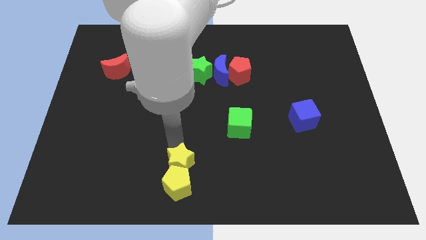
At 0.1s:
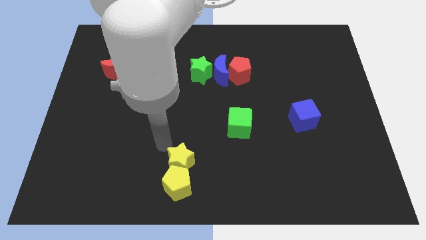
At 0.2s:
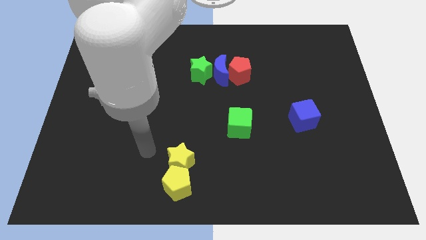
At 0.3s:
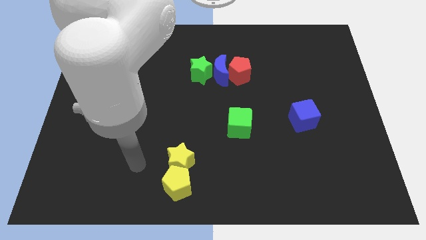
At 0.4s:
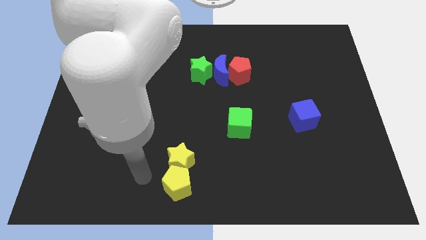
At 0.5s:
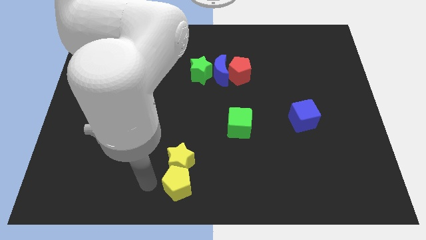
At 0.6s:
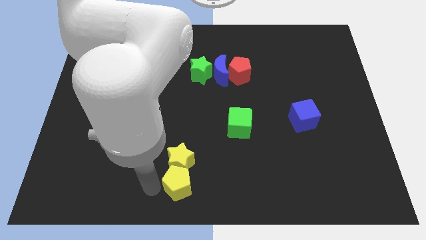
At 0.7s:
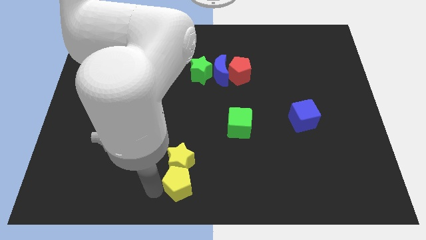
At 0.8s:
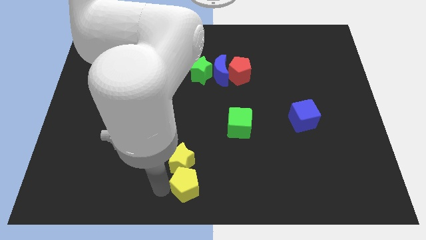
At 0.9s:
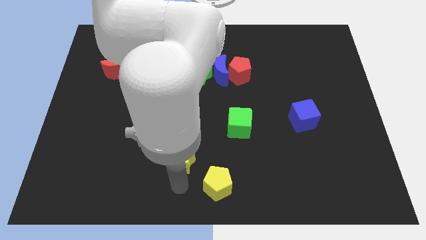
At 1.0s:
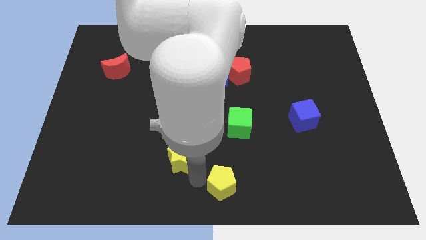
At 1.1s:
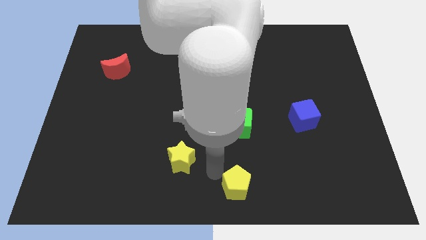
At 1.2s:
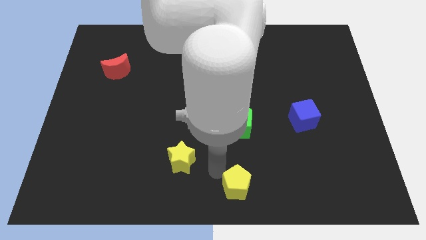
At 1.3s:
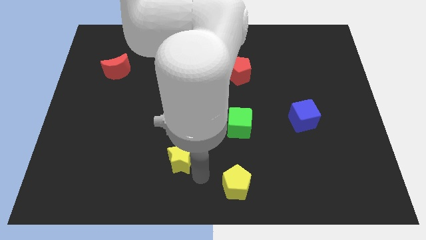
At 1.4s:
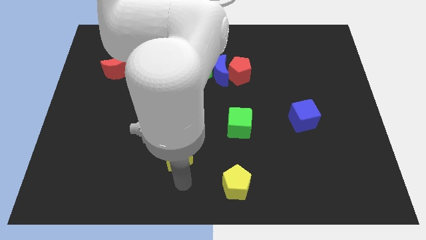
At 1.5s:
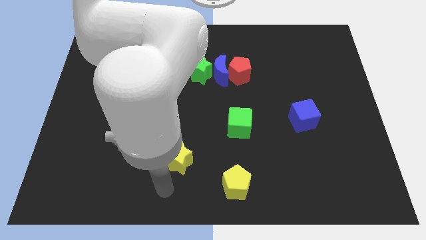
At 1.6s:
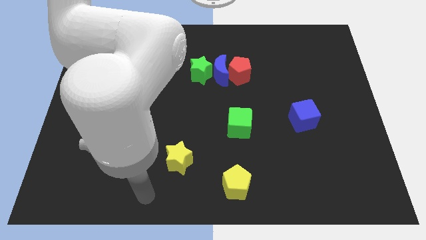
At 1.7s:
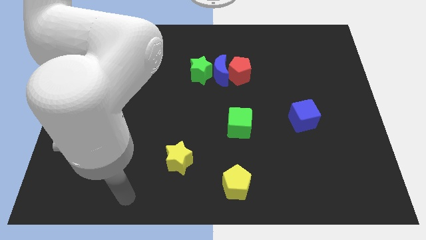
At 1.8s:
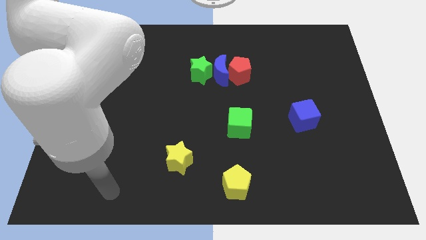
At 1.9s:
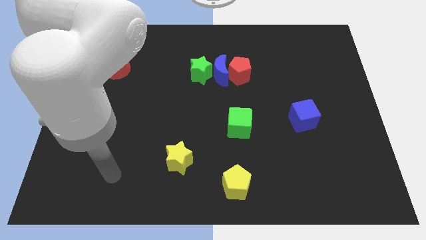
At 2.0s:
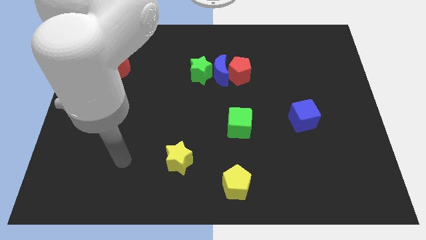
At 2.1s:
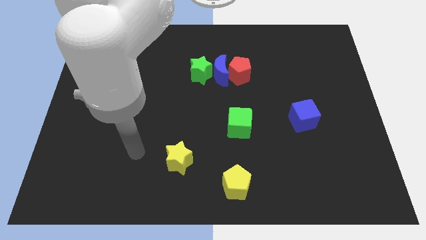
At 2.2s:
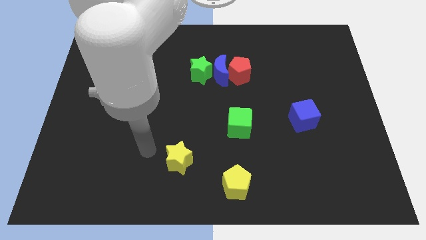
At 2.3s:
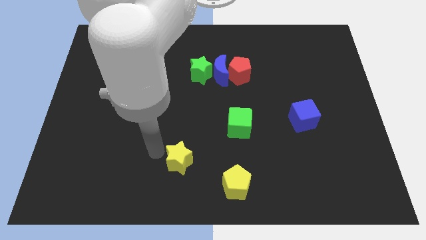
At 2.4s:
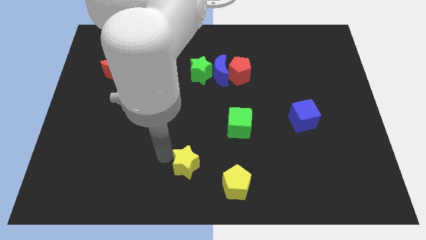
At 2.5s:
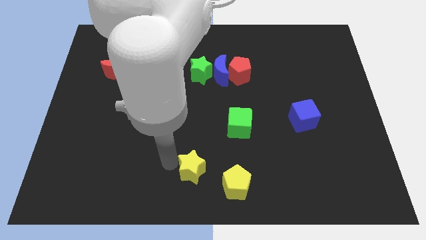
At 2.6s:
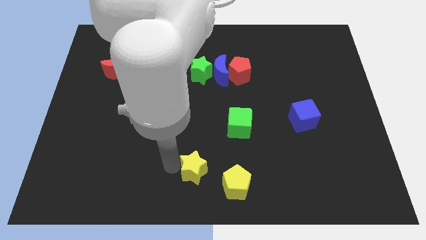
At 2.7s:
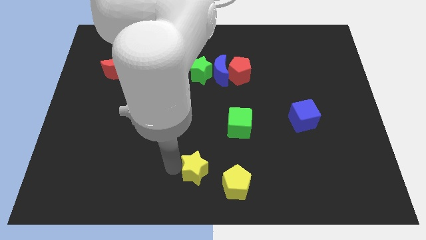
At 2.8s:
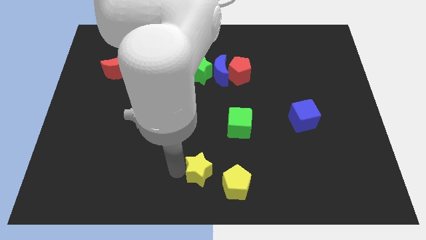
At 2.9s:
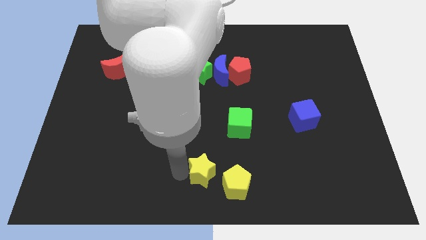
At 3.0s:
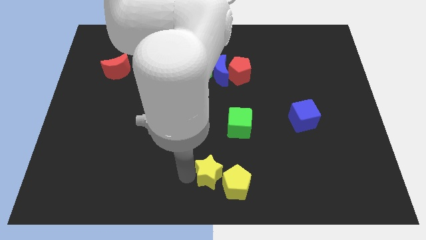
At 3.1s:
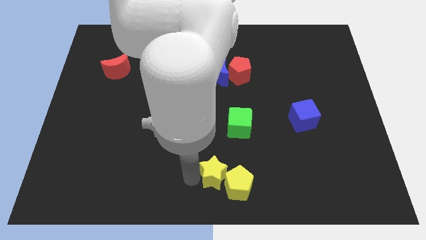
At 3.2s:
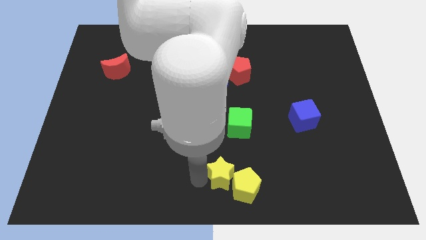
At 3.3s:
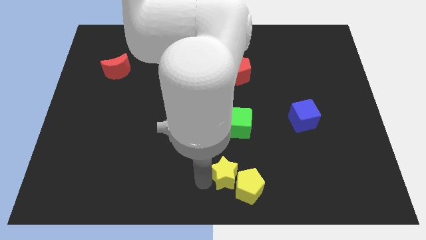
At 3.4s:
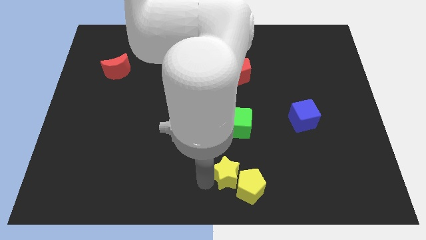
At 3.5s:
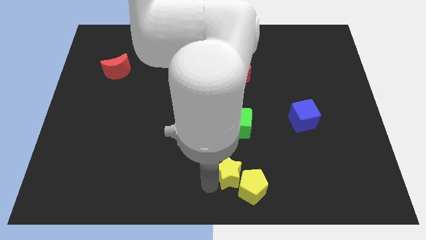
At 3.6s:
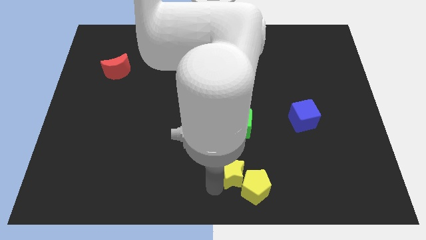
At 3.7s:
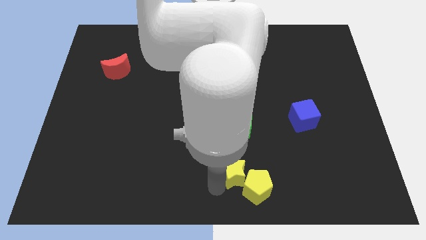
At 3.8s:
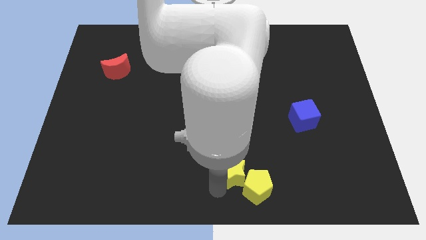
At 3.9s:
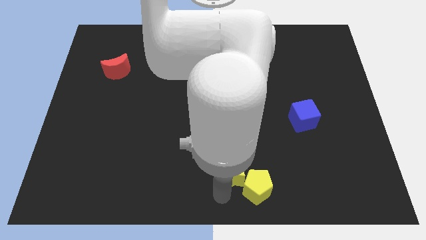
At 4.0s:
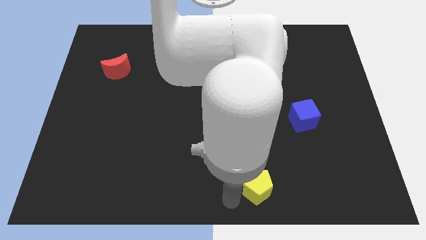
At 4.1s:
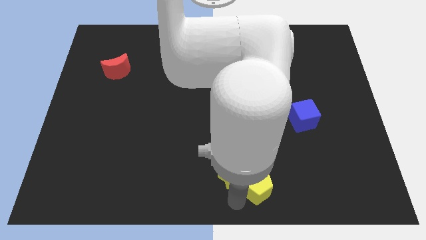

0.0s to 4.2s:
move both the yellow blocks slightly to the right side of the board

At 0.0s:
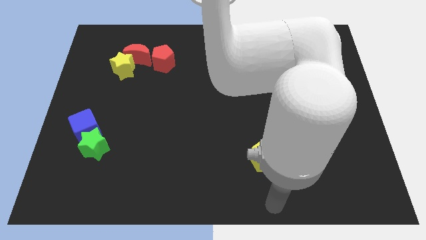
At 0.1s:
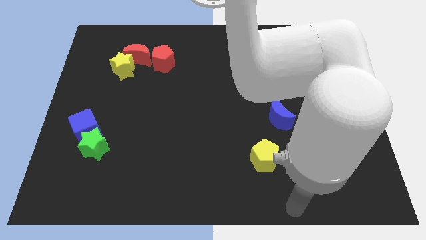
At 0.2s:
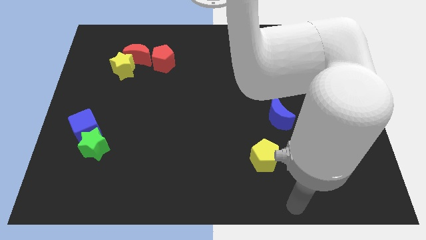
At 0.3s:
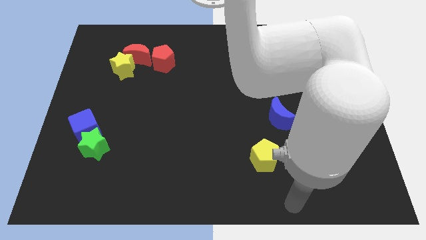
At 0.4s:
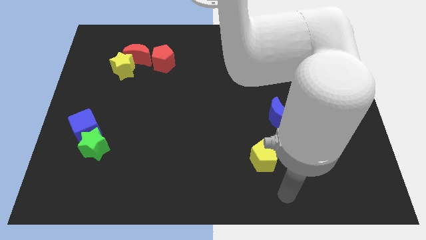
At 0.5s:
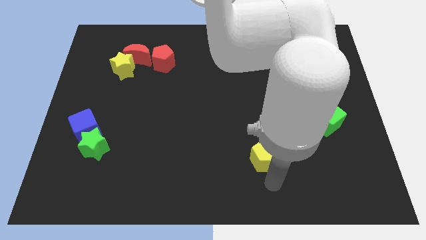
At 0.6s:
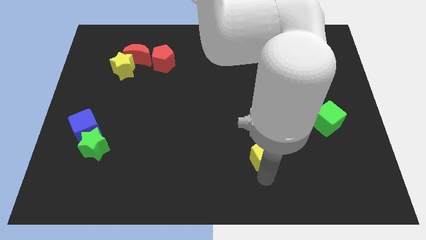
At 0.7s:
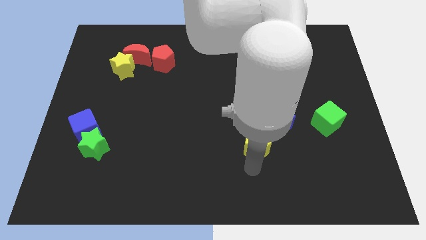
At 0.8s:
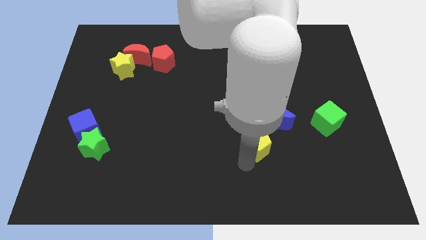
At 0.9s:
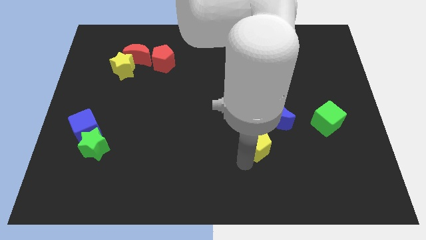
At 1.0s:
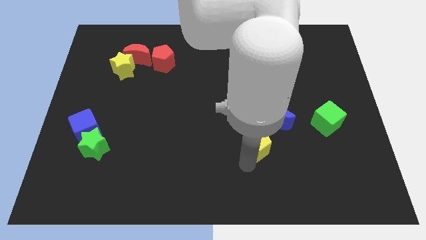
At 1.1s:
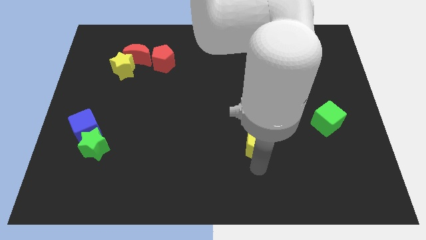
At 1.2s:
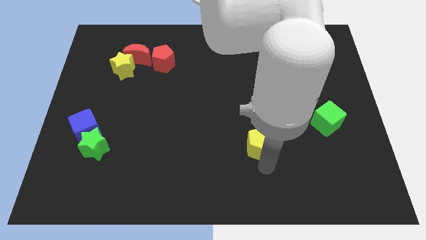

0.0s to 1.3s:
move the yellow pentagon slightly up

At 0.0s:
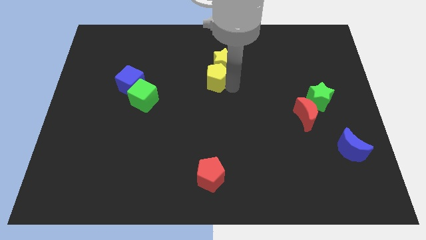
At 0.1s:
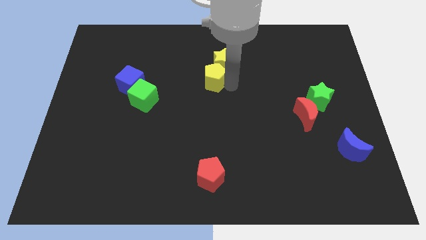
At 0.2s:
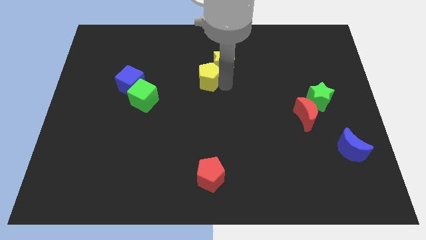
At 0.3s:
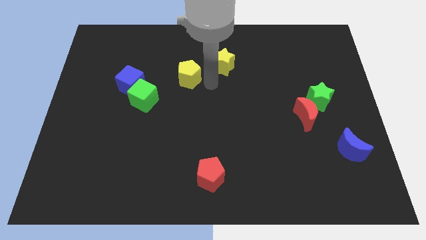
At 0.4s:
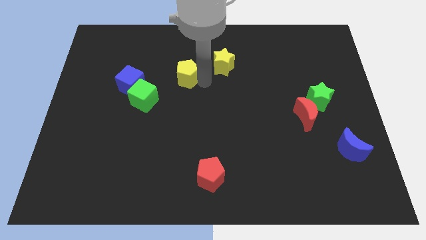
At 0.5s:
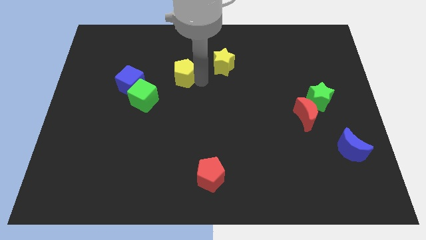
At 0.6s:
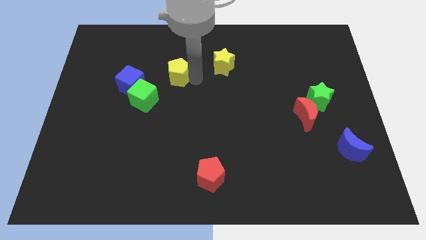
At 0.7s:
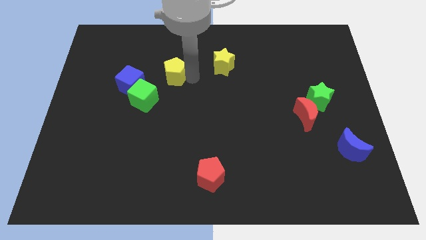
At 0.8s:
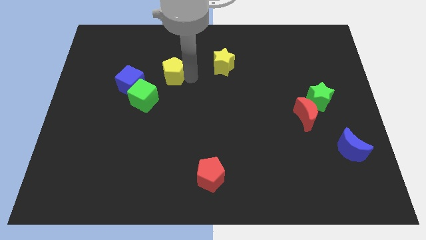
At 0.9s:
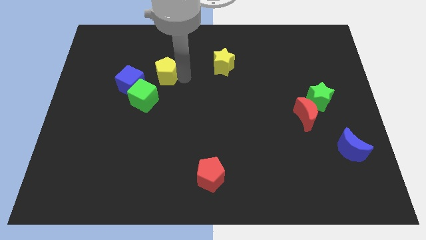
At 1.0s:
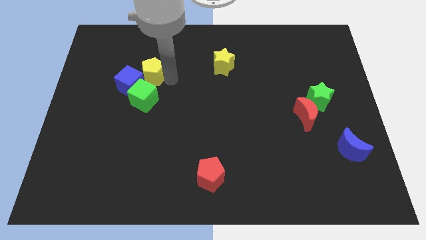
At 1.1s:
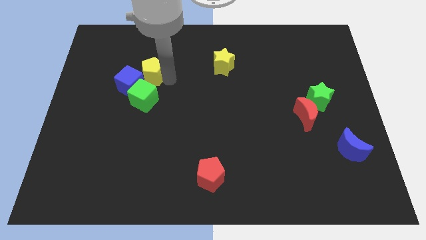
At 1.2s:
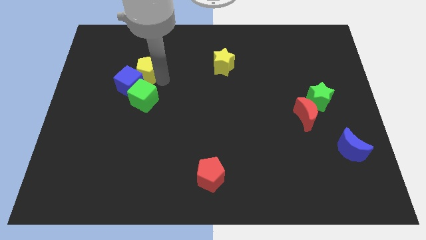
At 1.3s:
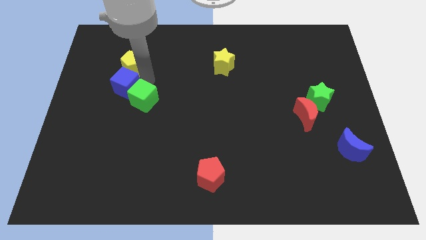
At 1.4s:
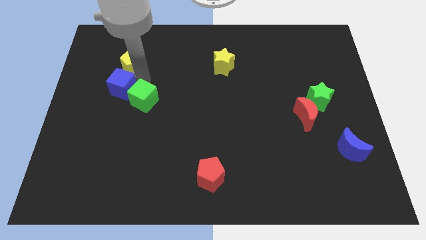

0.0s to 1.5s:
move the yellow pentaon into the top side of the blue cube

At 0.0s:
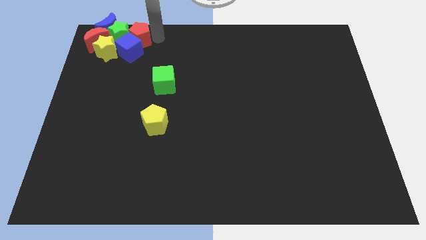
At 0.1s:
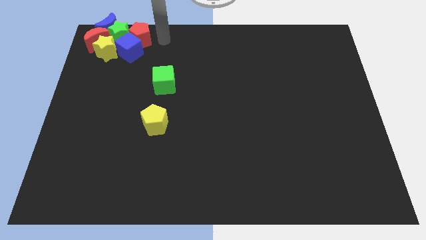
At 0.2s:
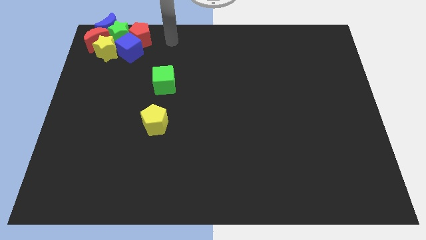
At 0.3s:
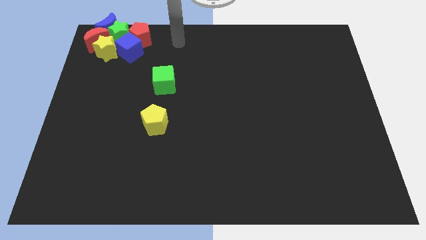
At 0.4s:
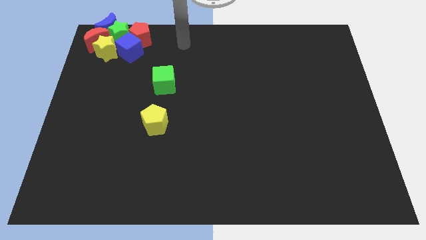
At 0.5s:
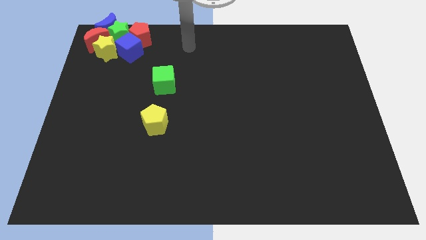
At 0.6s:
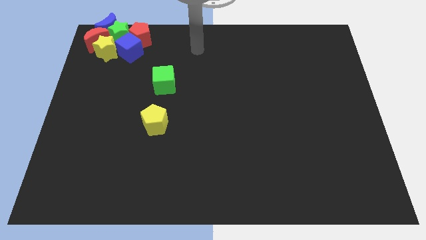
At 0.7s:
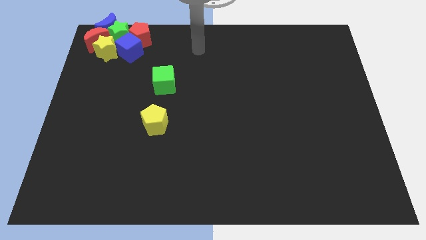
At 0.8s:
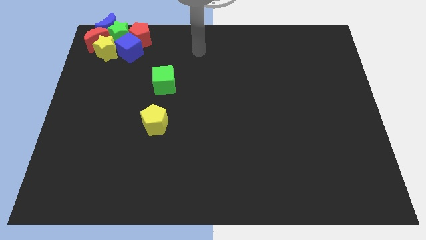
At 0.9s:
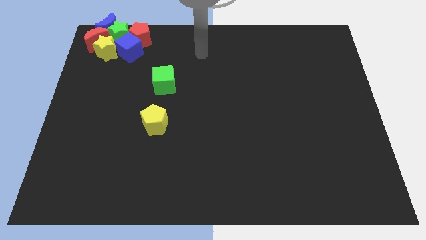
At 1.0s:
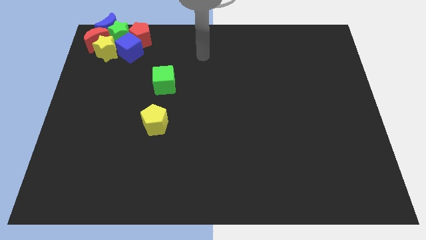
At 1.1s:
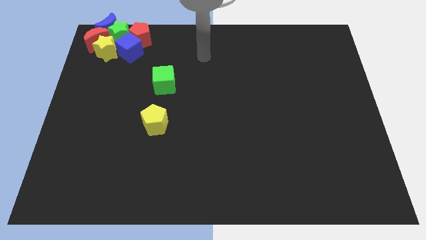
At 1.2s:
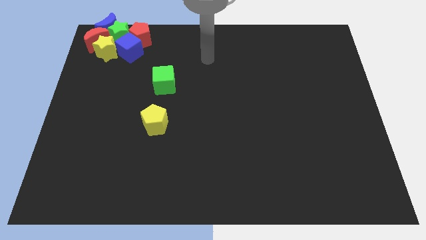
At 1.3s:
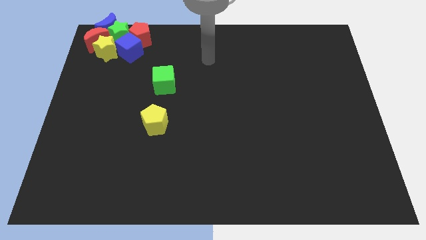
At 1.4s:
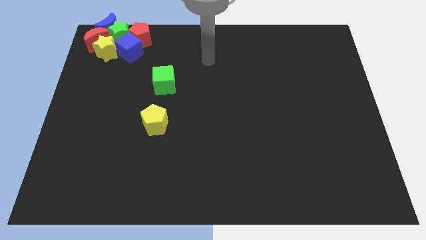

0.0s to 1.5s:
move the arm away from the red pentagon

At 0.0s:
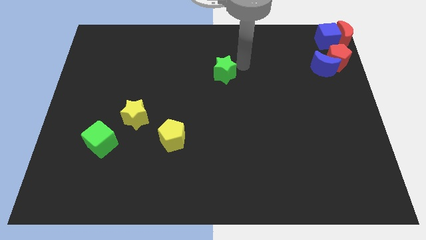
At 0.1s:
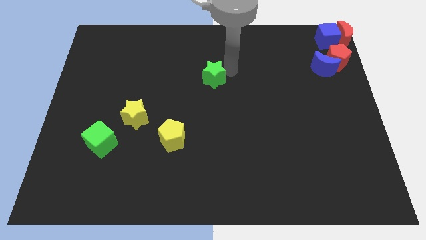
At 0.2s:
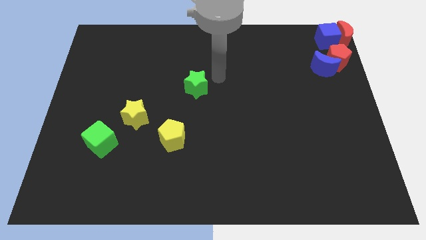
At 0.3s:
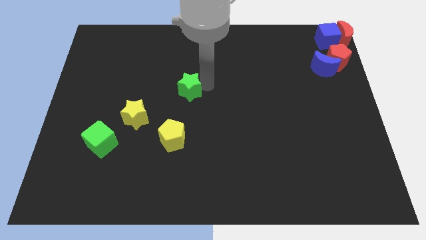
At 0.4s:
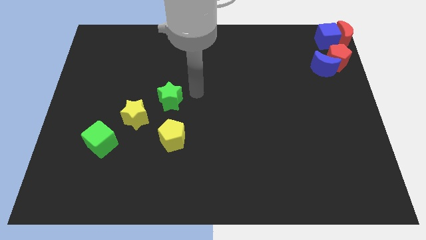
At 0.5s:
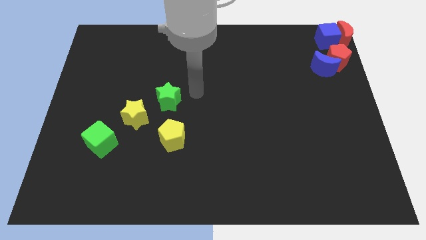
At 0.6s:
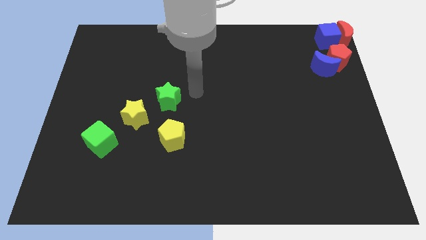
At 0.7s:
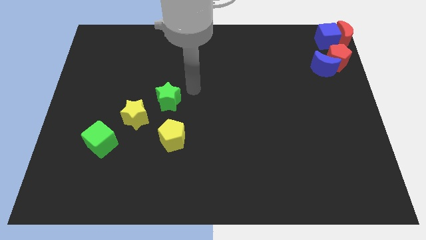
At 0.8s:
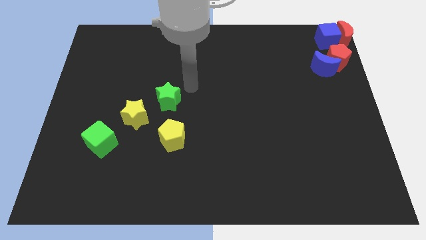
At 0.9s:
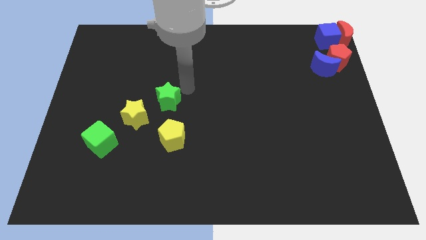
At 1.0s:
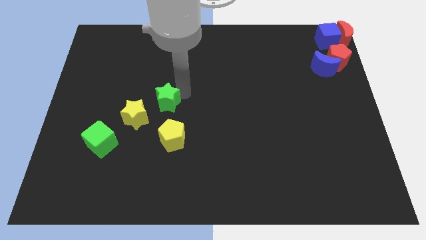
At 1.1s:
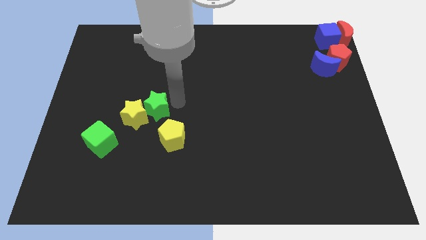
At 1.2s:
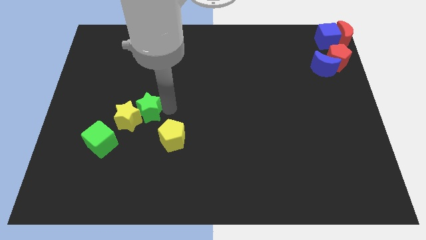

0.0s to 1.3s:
move the green star to the top right side of the yellow star
